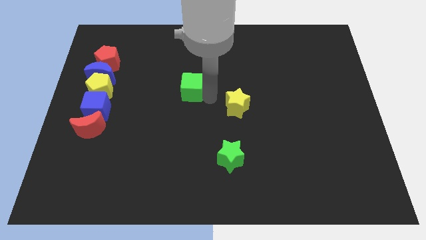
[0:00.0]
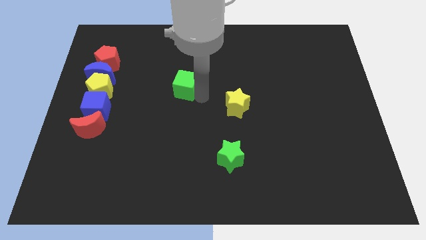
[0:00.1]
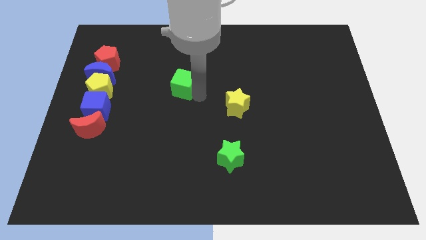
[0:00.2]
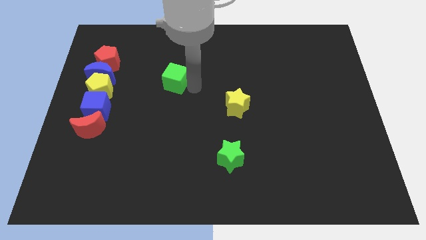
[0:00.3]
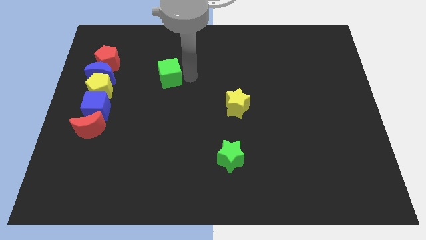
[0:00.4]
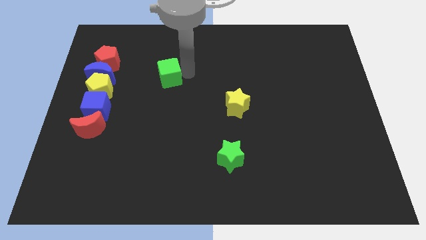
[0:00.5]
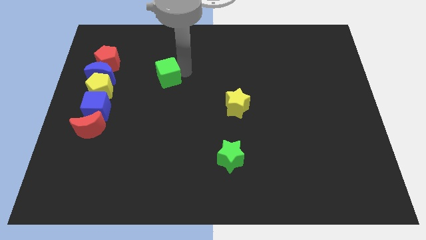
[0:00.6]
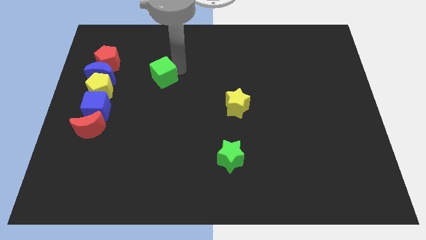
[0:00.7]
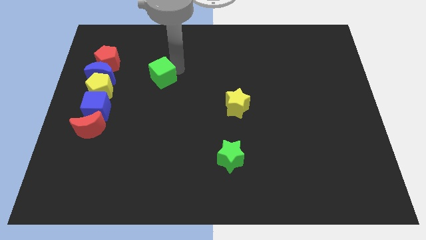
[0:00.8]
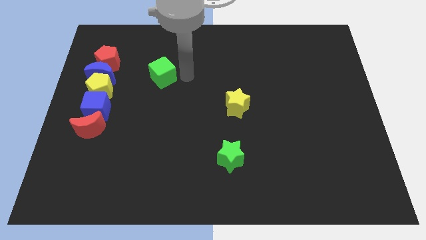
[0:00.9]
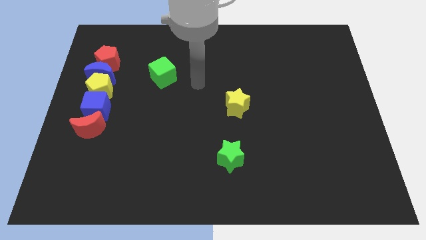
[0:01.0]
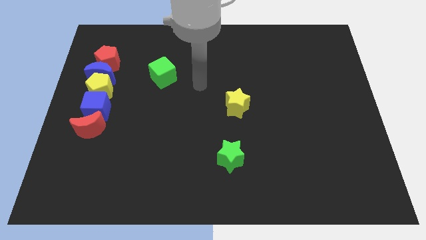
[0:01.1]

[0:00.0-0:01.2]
move the green cube diagonal to the right of the blue crescent

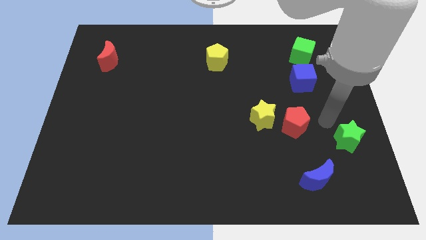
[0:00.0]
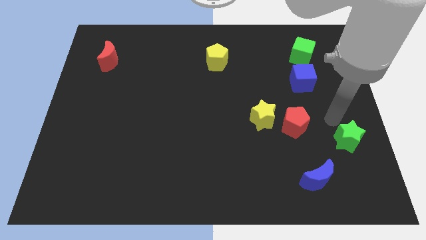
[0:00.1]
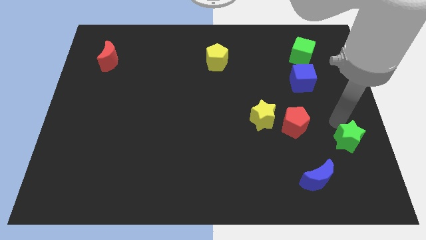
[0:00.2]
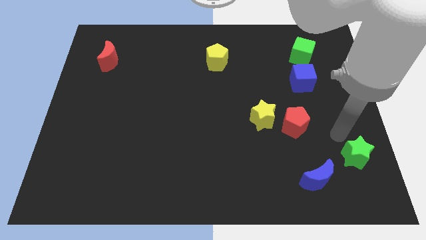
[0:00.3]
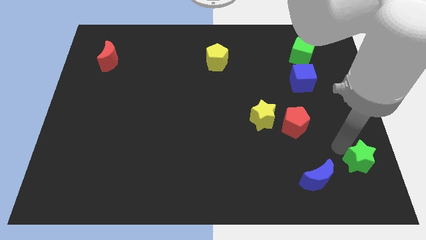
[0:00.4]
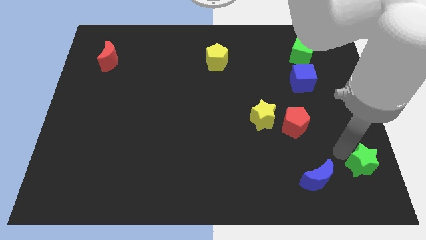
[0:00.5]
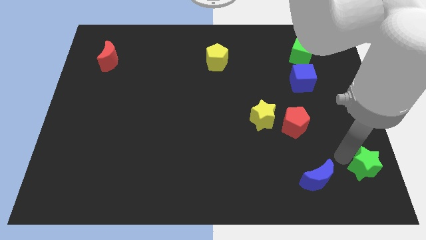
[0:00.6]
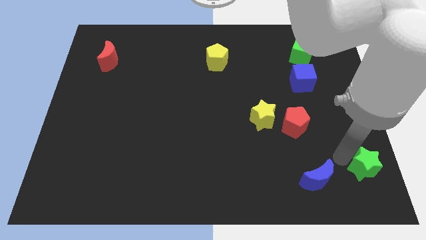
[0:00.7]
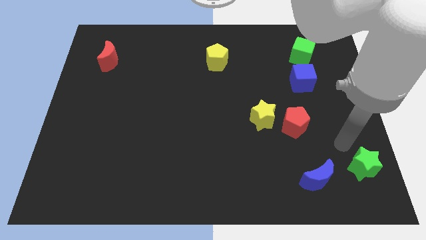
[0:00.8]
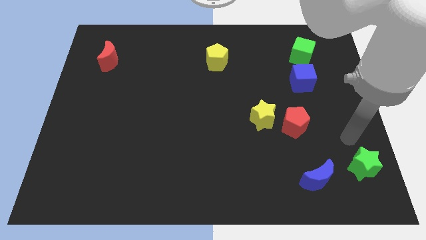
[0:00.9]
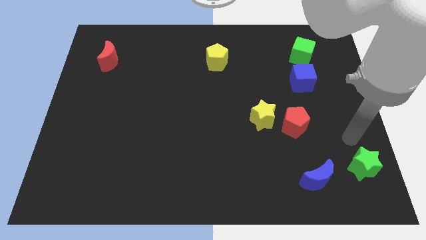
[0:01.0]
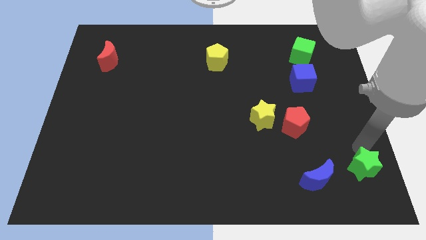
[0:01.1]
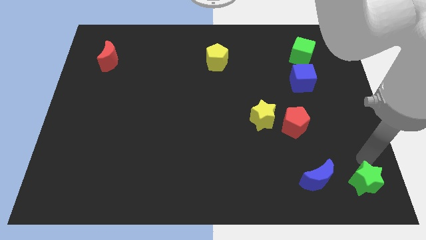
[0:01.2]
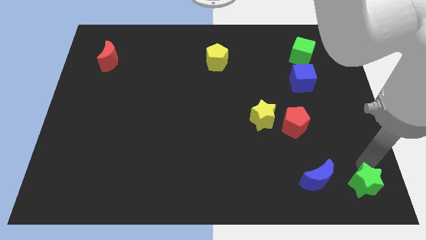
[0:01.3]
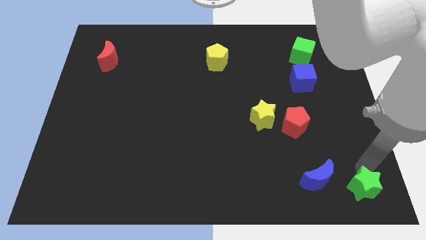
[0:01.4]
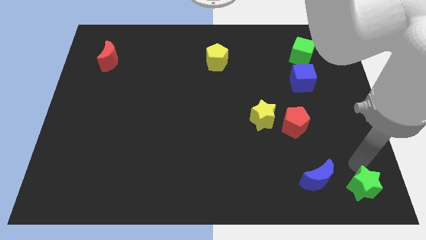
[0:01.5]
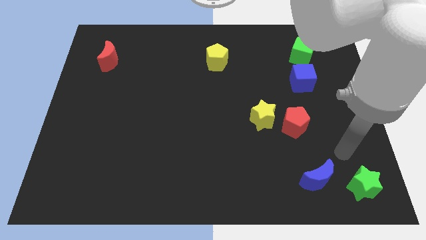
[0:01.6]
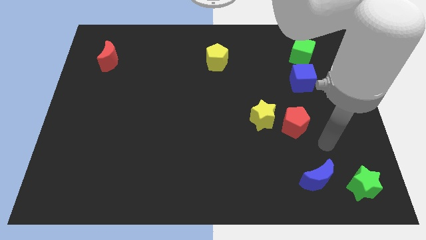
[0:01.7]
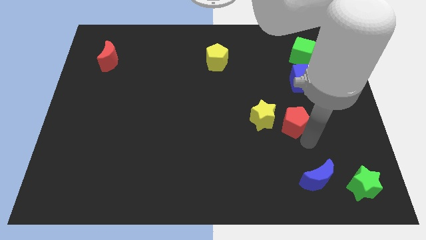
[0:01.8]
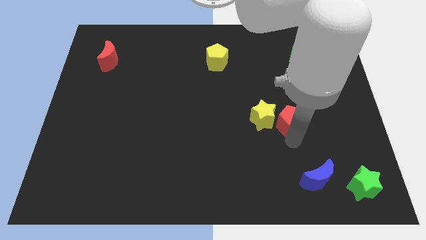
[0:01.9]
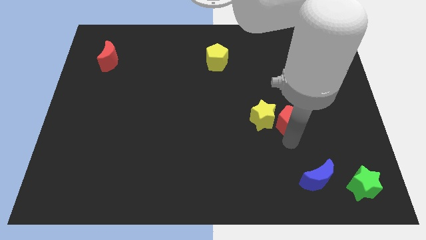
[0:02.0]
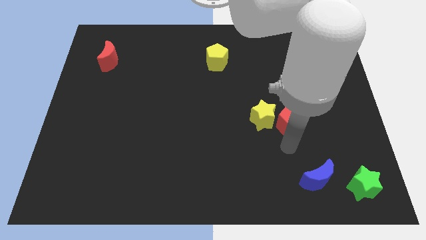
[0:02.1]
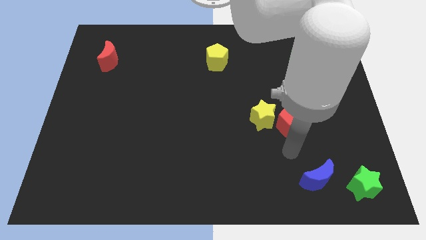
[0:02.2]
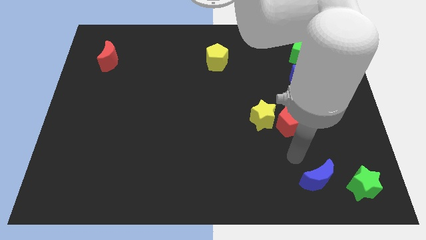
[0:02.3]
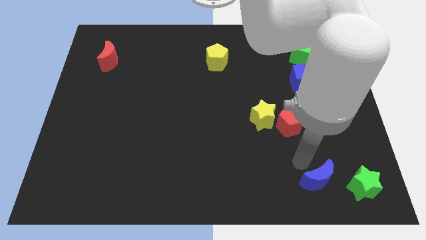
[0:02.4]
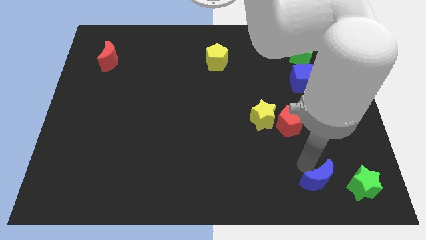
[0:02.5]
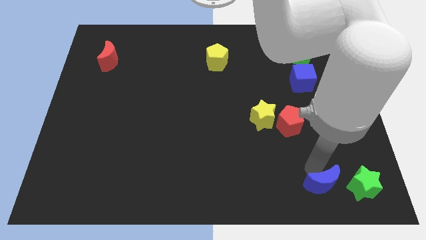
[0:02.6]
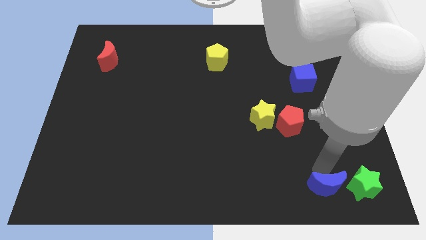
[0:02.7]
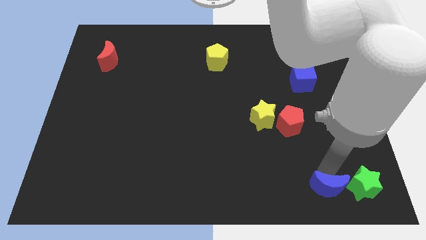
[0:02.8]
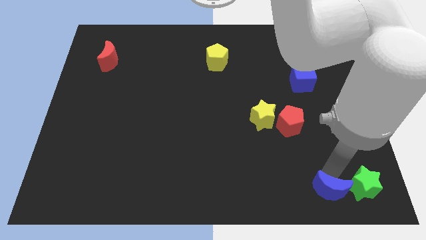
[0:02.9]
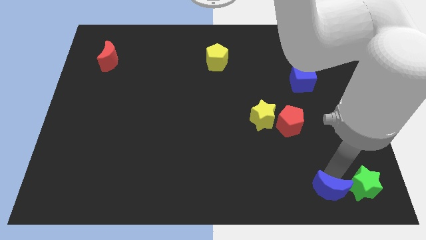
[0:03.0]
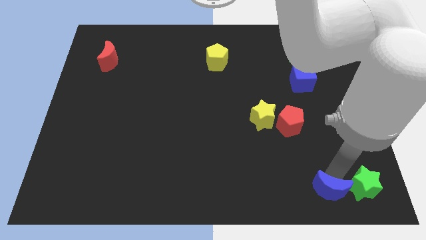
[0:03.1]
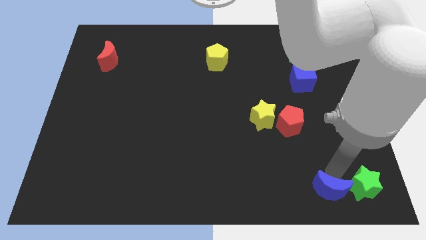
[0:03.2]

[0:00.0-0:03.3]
place the blue crescent and green star adjacent to each other

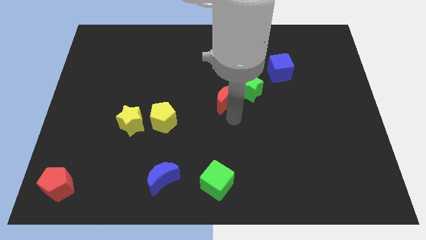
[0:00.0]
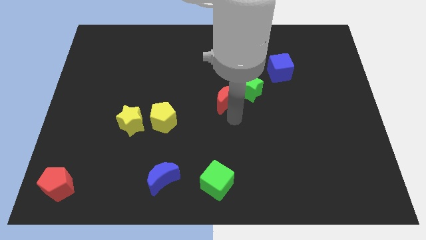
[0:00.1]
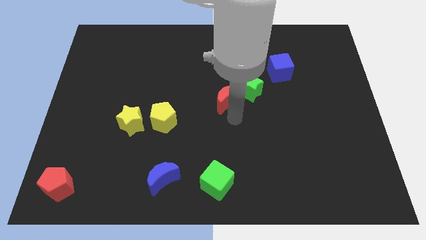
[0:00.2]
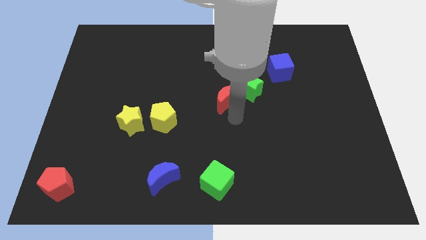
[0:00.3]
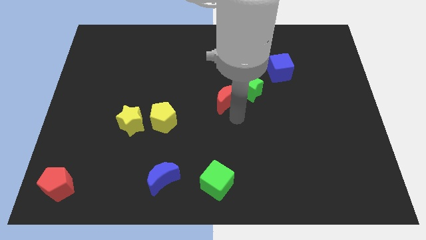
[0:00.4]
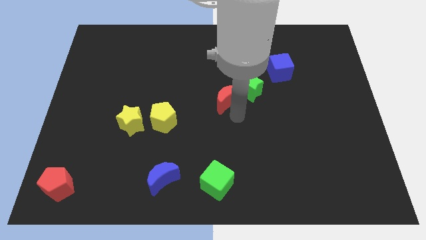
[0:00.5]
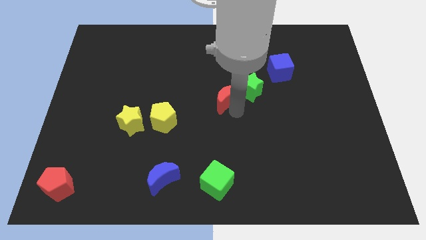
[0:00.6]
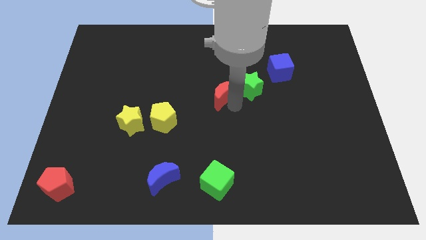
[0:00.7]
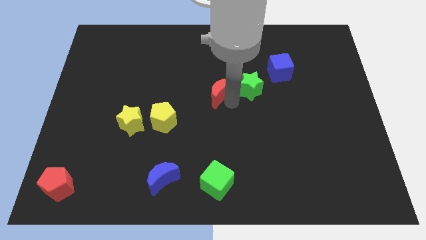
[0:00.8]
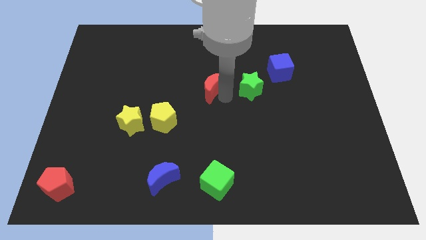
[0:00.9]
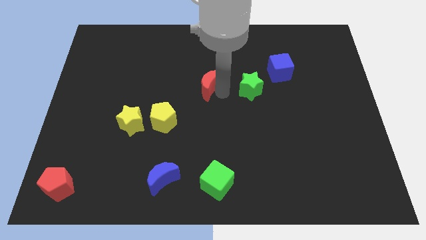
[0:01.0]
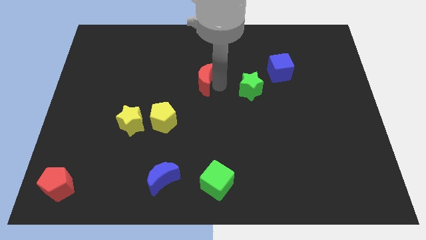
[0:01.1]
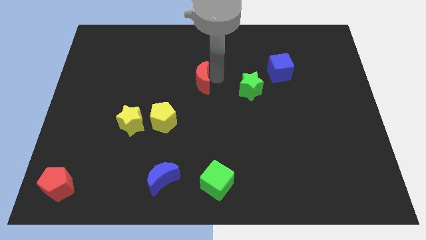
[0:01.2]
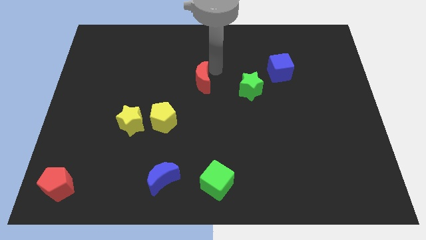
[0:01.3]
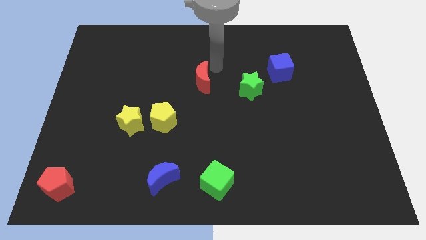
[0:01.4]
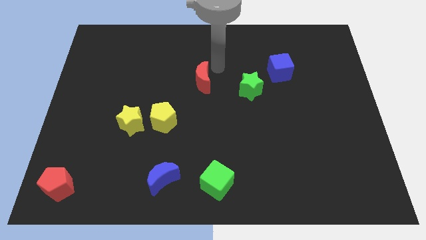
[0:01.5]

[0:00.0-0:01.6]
put the red crescent at the top side of the green cube

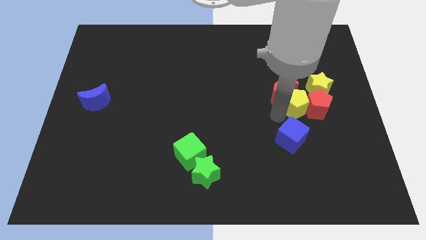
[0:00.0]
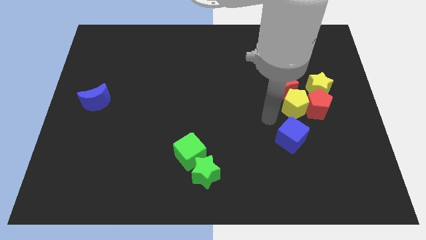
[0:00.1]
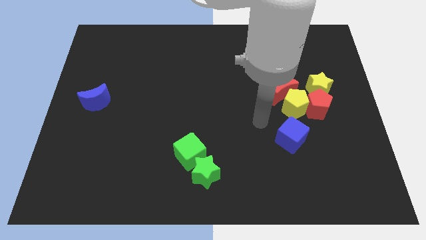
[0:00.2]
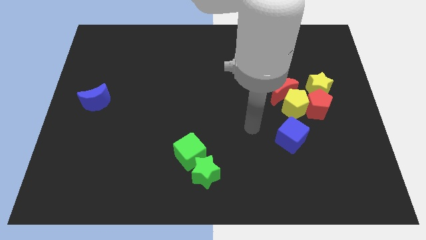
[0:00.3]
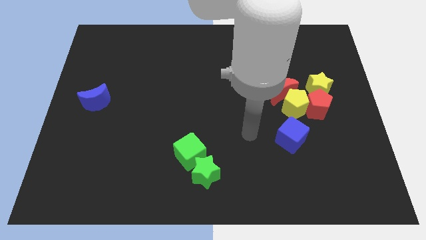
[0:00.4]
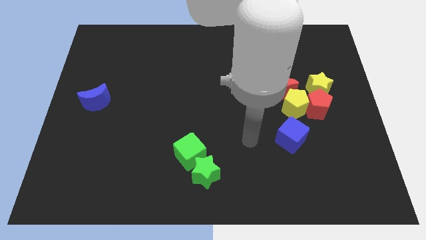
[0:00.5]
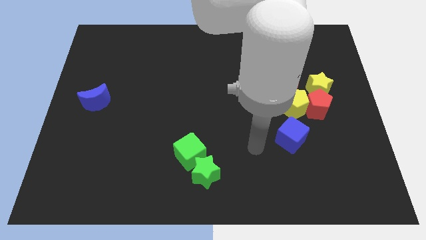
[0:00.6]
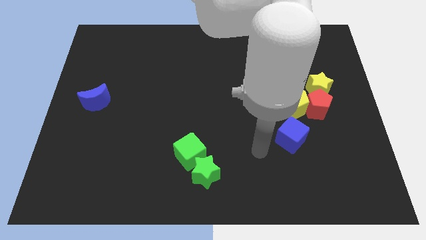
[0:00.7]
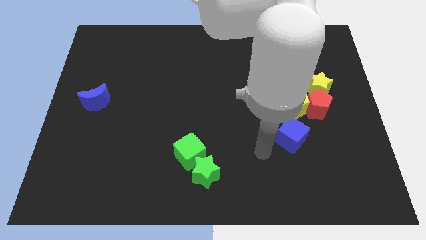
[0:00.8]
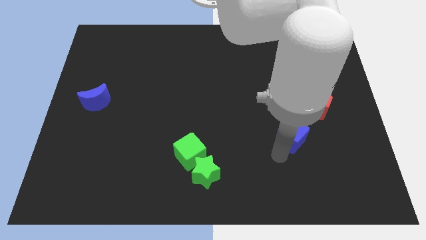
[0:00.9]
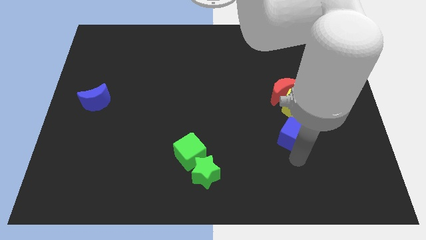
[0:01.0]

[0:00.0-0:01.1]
move your arm to the bottom of the blue cube

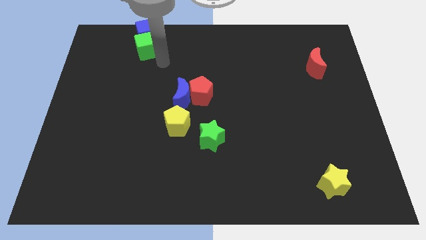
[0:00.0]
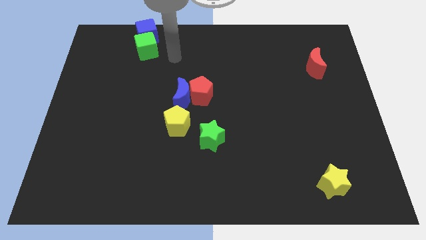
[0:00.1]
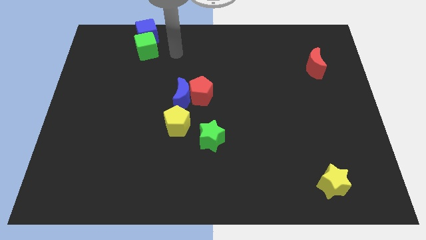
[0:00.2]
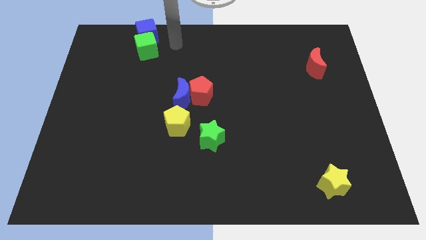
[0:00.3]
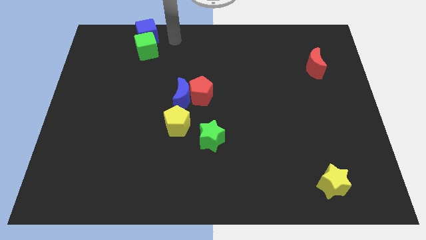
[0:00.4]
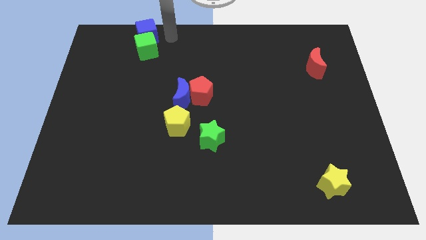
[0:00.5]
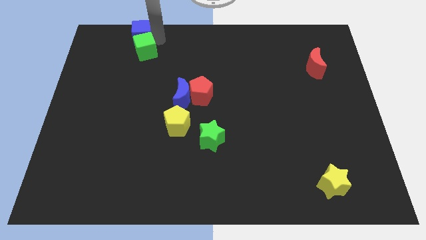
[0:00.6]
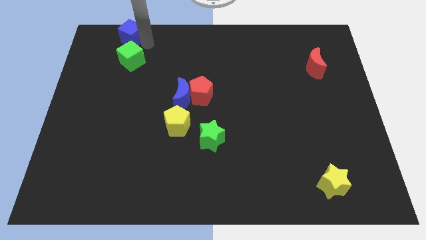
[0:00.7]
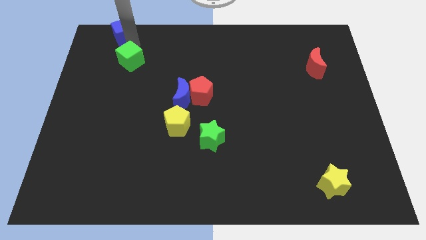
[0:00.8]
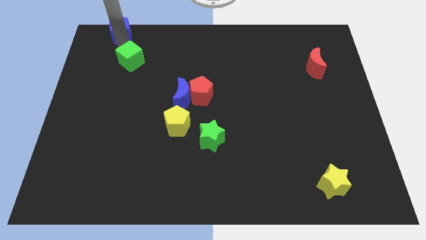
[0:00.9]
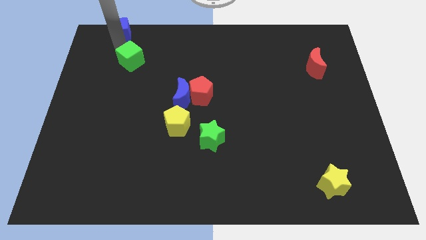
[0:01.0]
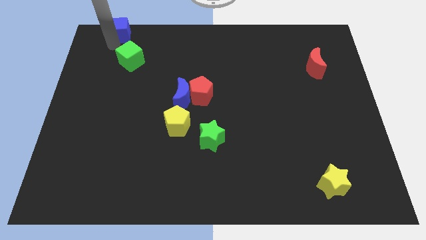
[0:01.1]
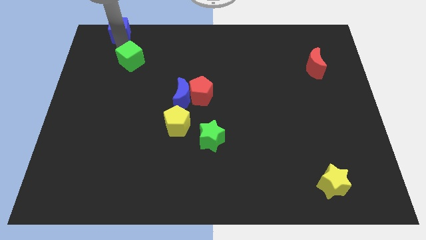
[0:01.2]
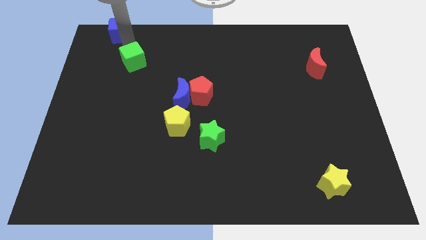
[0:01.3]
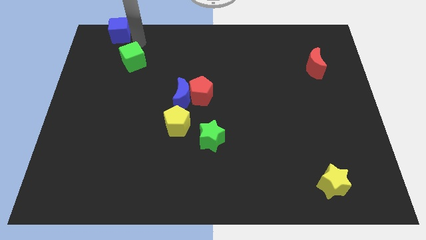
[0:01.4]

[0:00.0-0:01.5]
separate the green cube and the blue cube

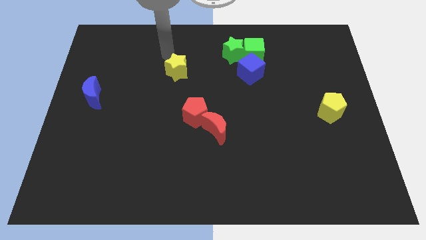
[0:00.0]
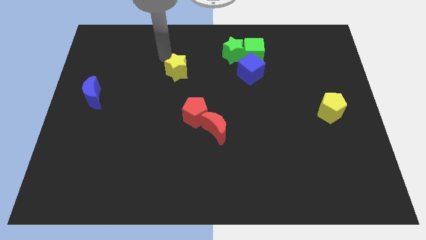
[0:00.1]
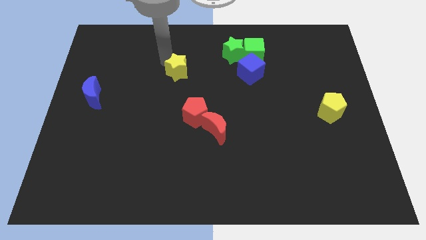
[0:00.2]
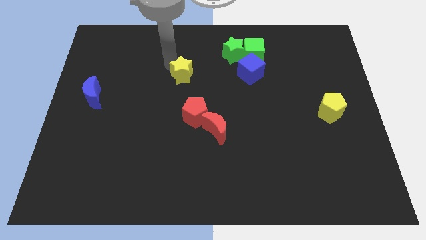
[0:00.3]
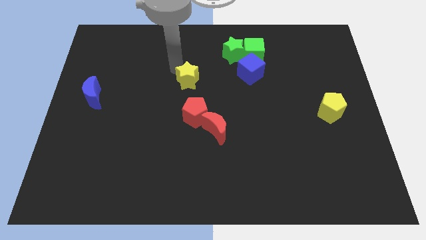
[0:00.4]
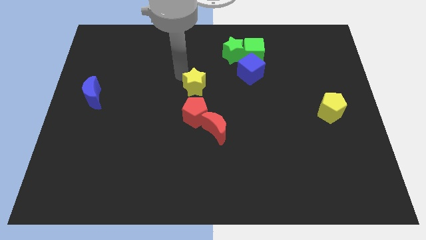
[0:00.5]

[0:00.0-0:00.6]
move the yellow star above the red pentagon
